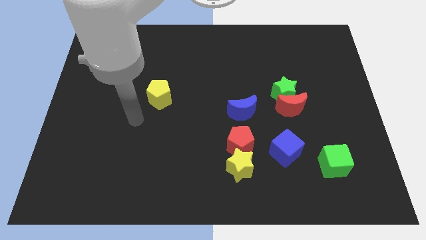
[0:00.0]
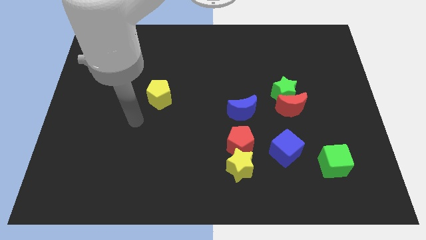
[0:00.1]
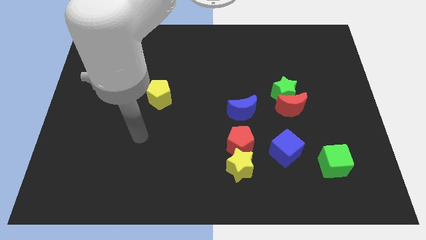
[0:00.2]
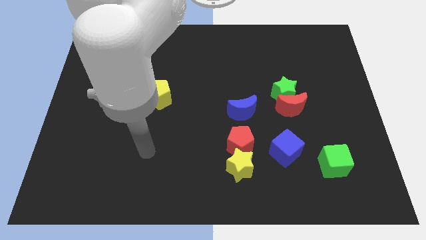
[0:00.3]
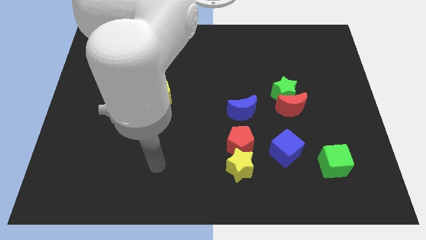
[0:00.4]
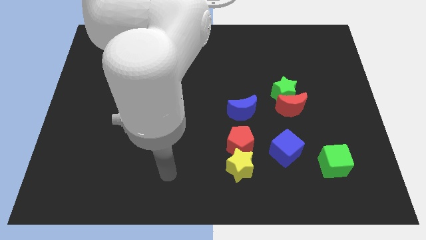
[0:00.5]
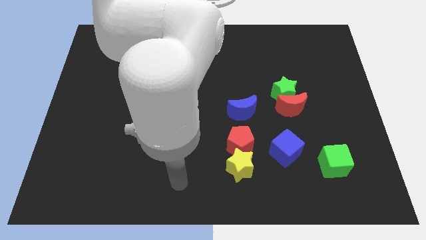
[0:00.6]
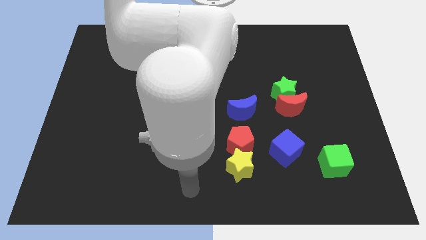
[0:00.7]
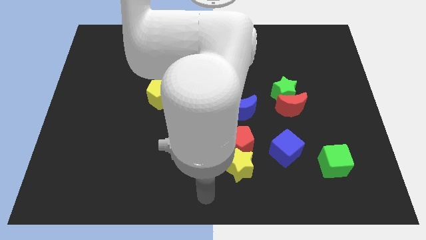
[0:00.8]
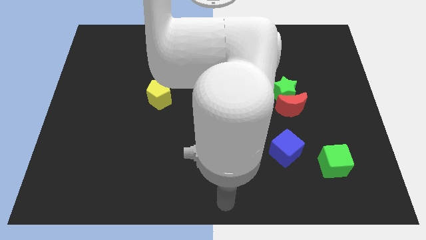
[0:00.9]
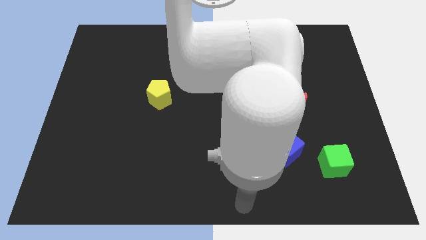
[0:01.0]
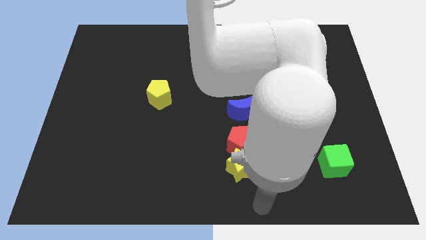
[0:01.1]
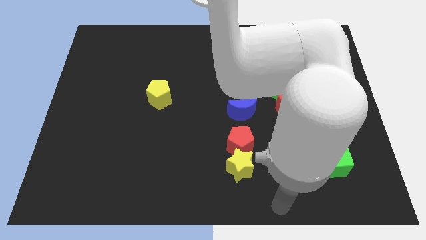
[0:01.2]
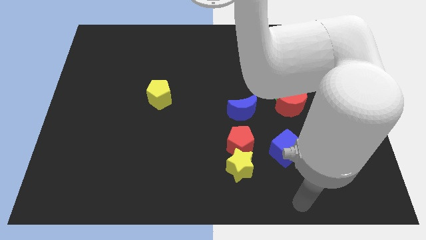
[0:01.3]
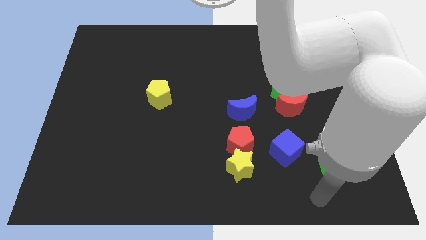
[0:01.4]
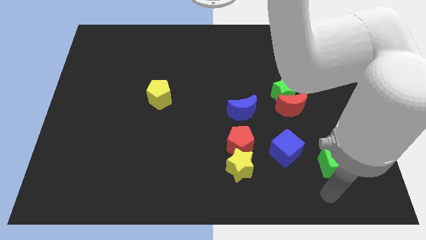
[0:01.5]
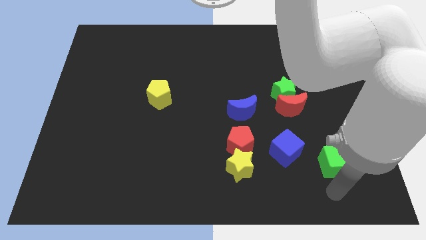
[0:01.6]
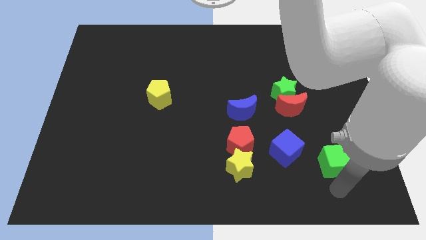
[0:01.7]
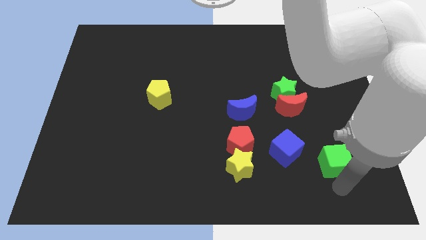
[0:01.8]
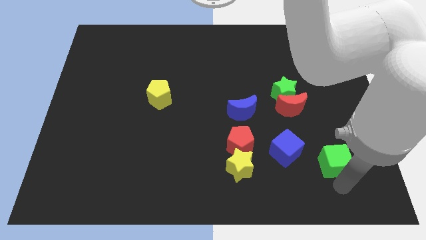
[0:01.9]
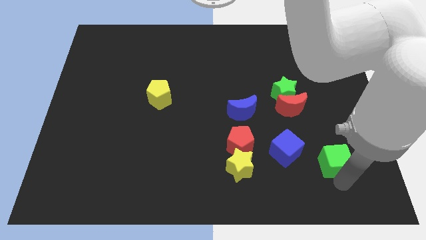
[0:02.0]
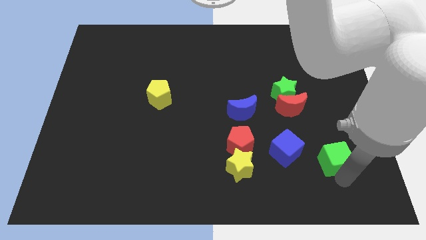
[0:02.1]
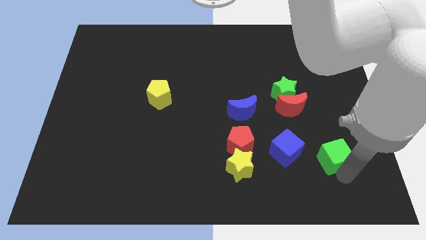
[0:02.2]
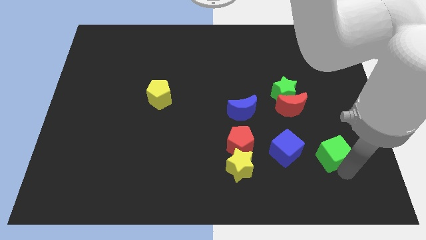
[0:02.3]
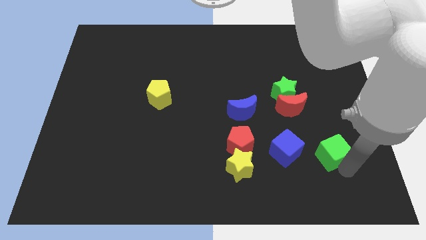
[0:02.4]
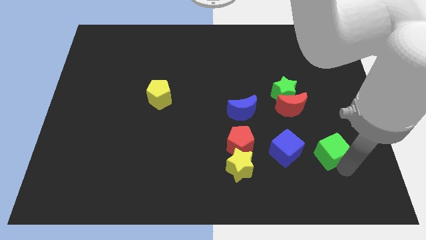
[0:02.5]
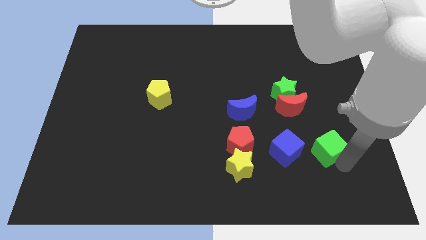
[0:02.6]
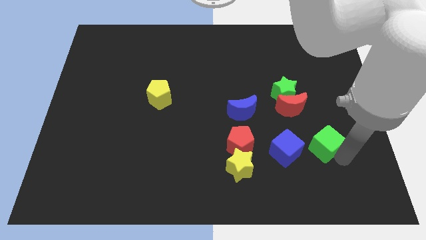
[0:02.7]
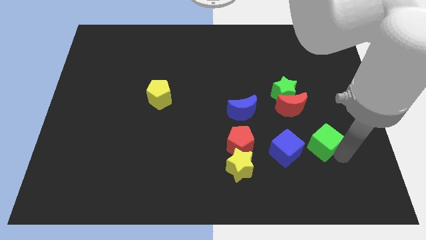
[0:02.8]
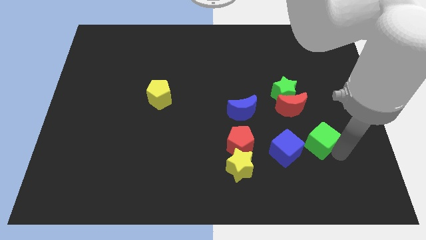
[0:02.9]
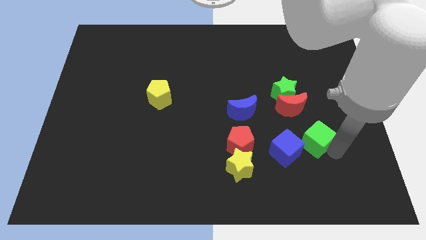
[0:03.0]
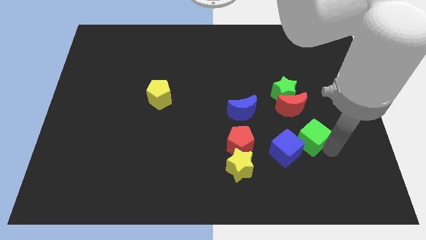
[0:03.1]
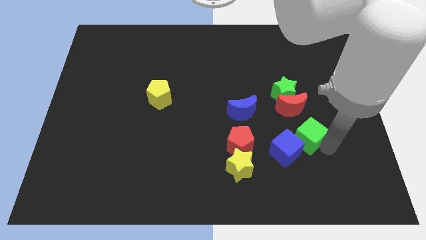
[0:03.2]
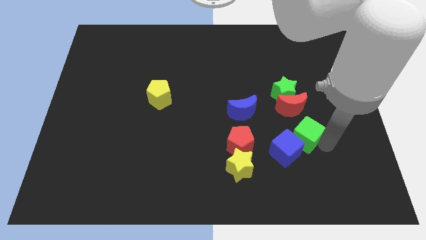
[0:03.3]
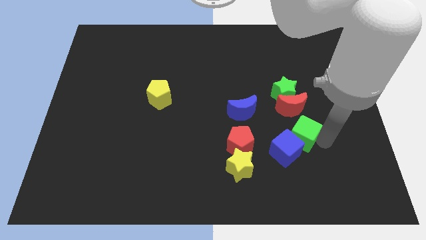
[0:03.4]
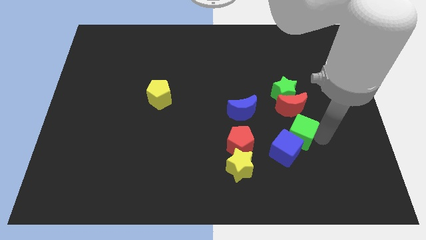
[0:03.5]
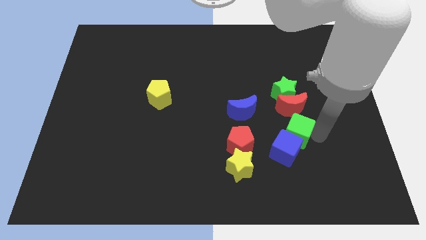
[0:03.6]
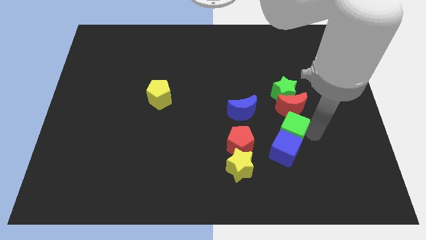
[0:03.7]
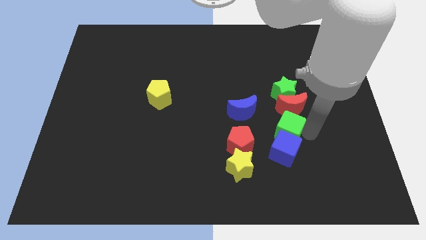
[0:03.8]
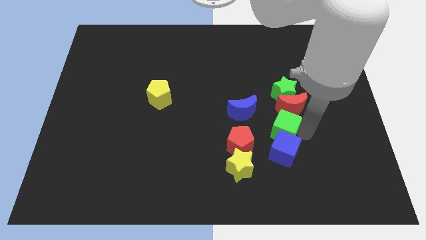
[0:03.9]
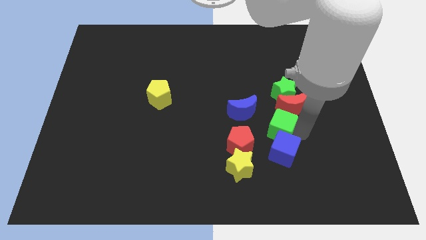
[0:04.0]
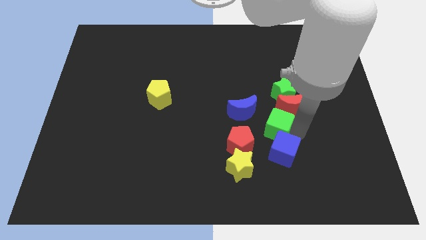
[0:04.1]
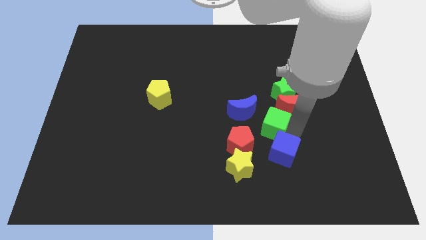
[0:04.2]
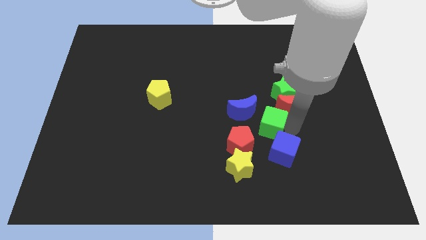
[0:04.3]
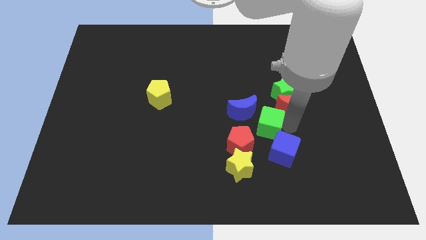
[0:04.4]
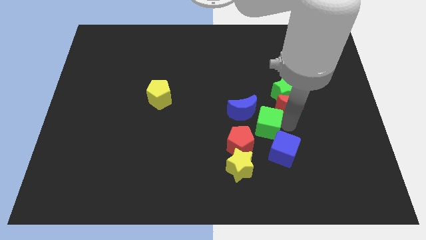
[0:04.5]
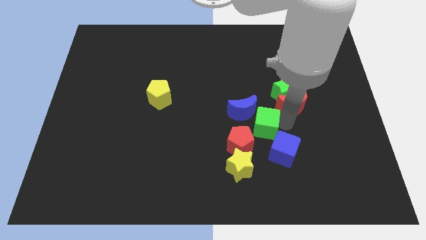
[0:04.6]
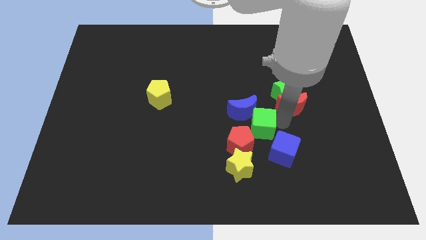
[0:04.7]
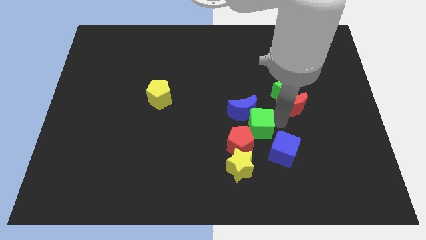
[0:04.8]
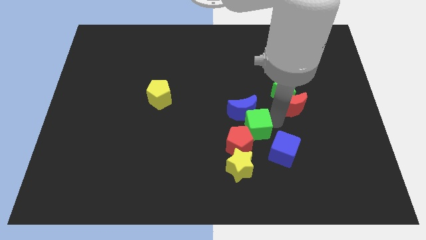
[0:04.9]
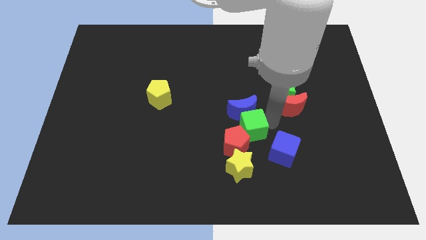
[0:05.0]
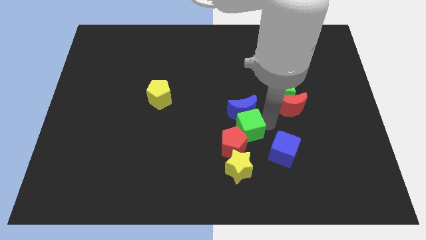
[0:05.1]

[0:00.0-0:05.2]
put the green cube next to the red pentagon

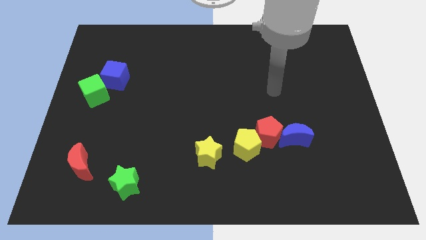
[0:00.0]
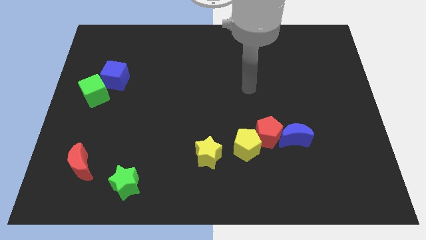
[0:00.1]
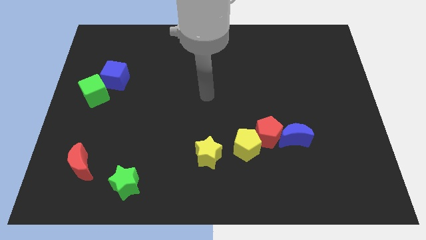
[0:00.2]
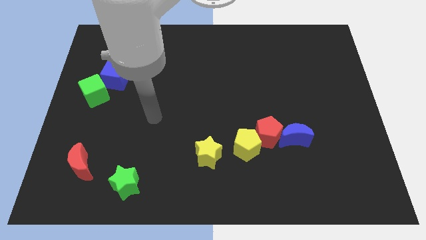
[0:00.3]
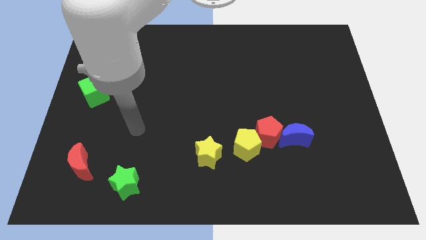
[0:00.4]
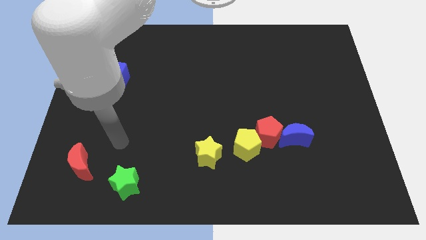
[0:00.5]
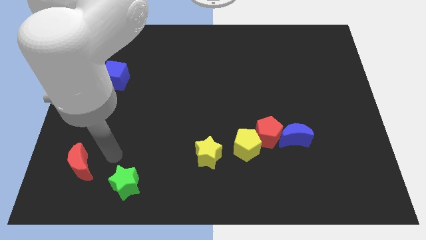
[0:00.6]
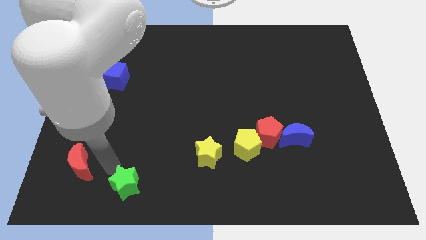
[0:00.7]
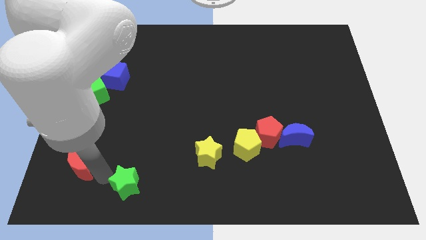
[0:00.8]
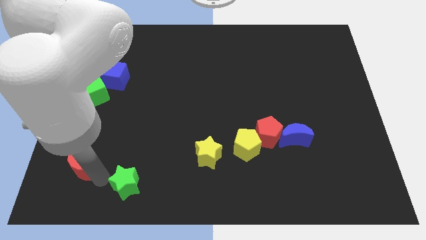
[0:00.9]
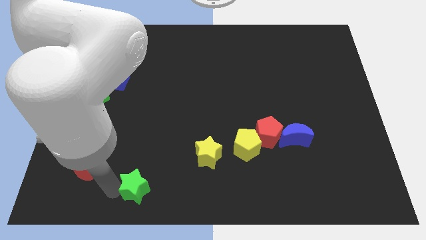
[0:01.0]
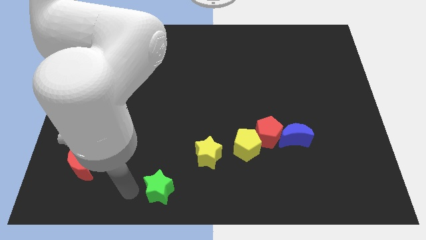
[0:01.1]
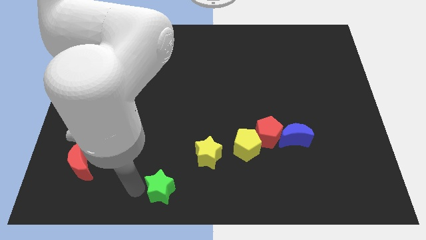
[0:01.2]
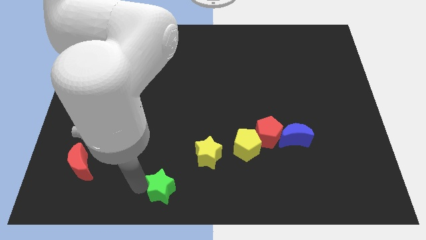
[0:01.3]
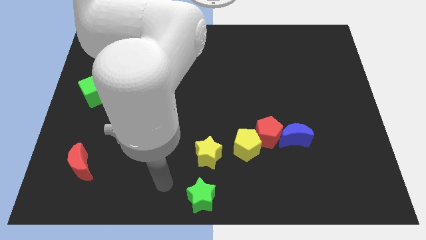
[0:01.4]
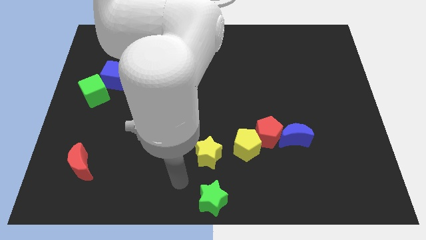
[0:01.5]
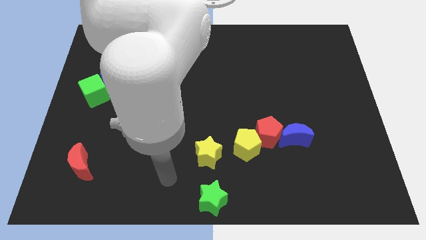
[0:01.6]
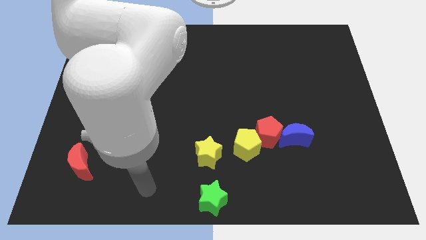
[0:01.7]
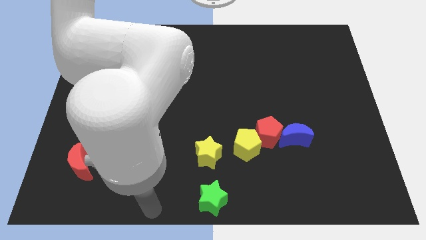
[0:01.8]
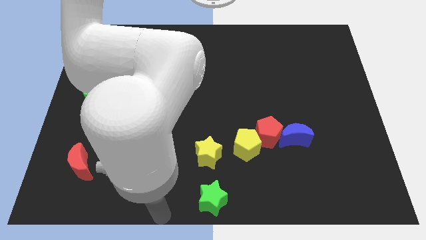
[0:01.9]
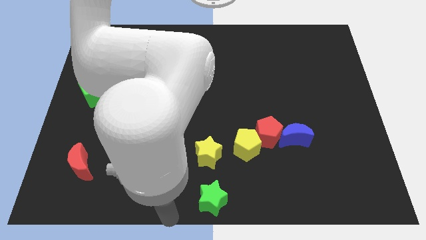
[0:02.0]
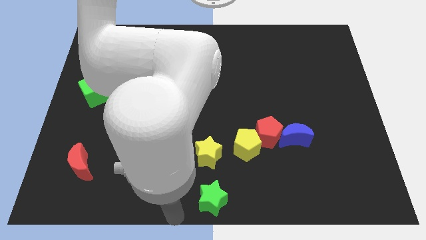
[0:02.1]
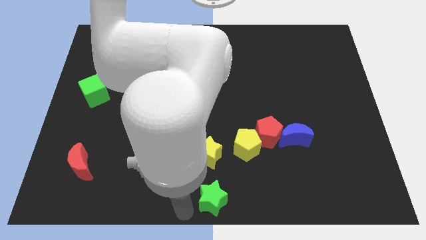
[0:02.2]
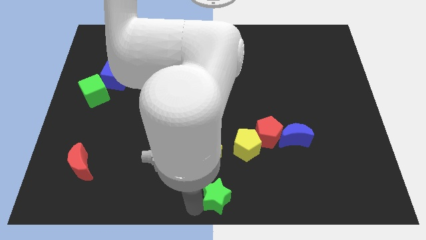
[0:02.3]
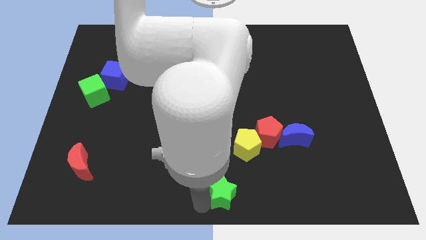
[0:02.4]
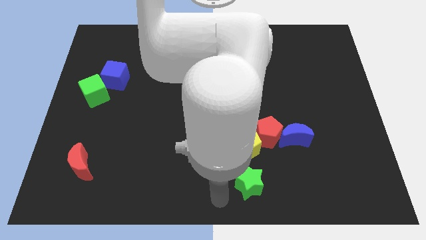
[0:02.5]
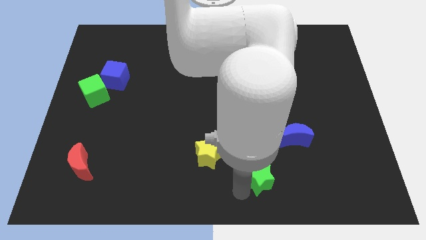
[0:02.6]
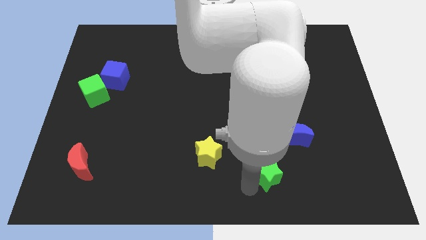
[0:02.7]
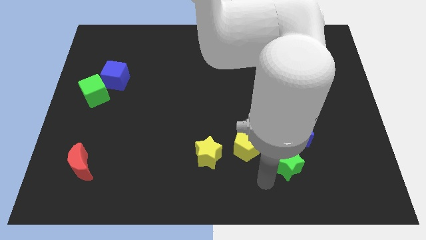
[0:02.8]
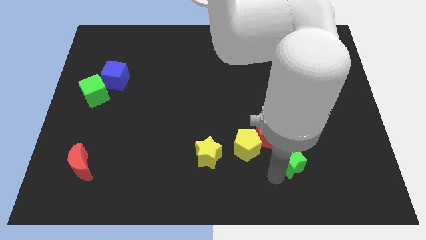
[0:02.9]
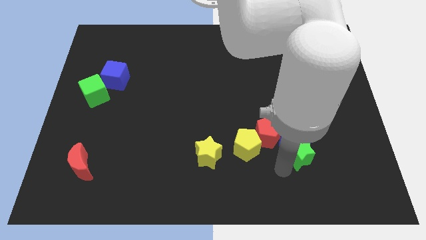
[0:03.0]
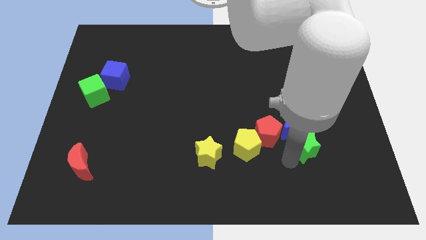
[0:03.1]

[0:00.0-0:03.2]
put the green star to the blue moon

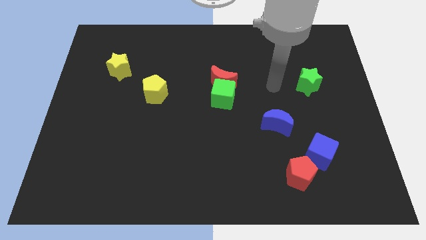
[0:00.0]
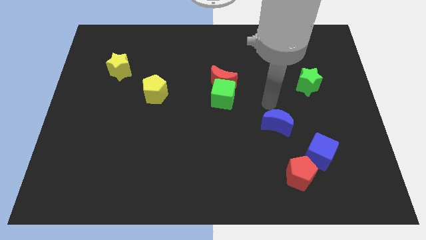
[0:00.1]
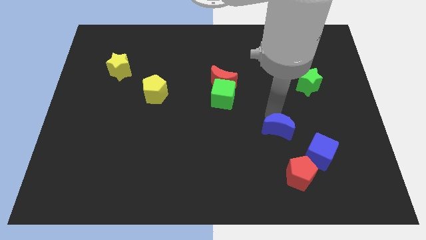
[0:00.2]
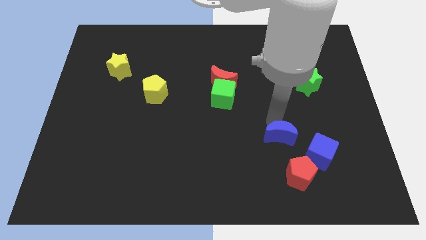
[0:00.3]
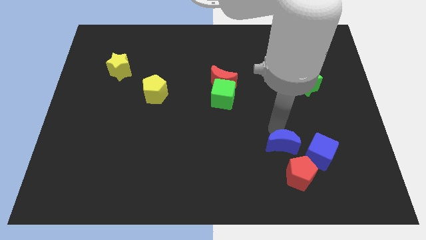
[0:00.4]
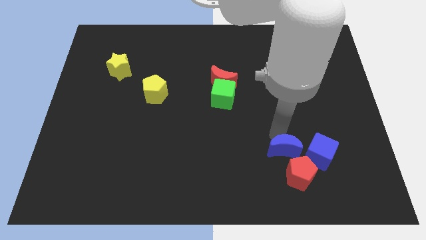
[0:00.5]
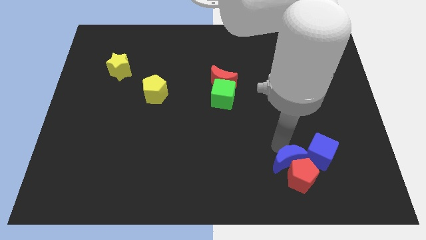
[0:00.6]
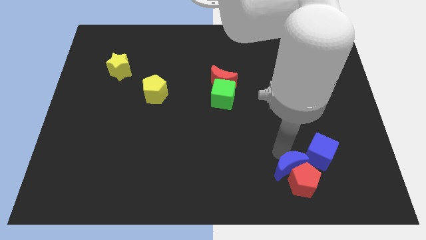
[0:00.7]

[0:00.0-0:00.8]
push the blue moon close to the red pentagon
